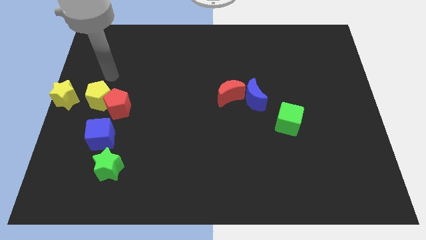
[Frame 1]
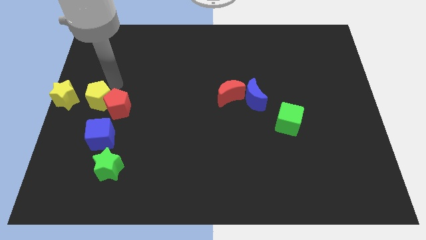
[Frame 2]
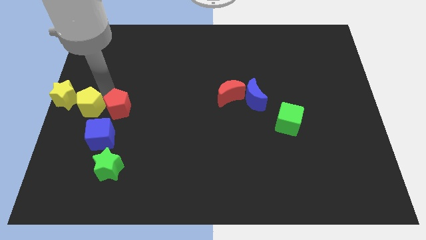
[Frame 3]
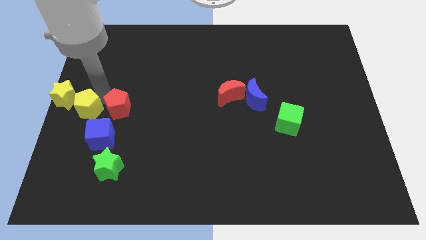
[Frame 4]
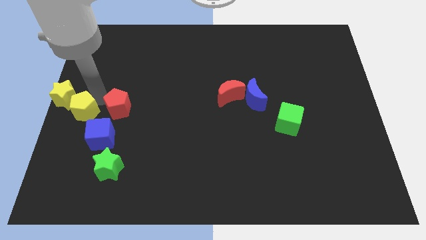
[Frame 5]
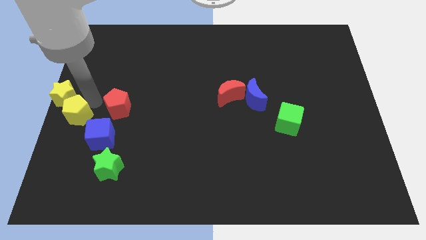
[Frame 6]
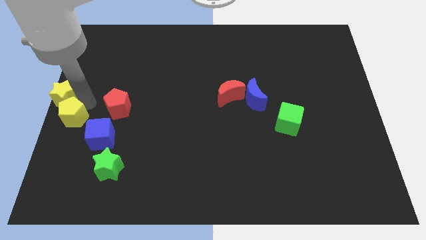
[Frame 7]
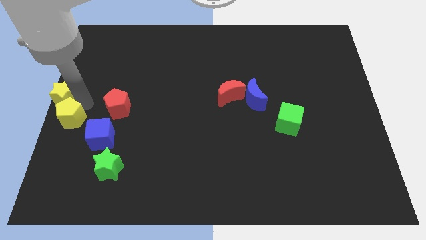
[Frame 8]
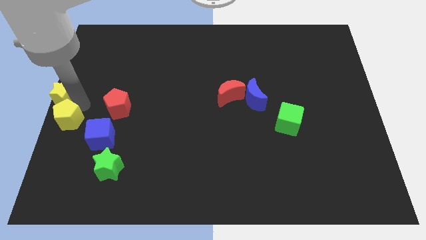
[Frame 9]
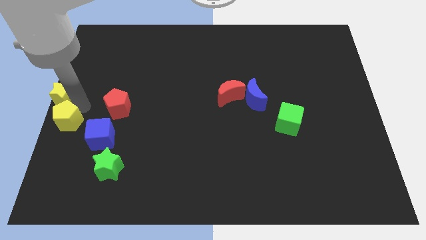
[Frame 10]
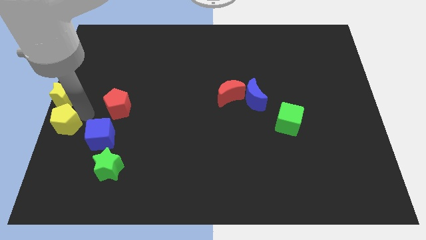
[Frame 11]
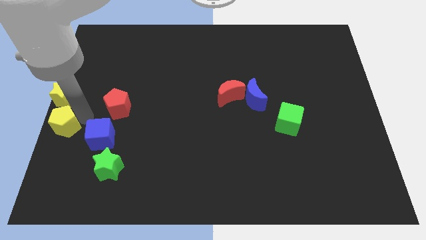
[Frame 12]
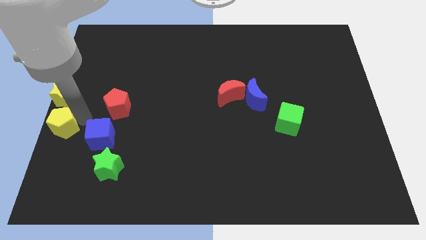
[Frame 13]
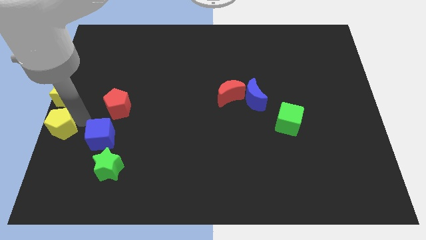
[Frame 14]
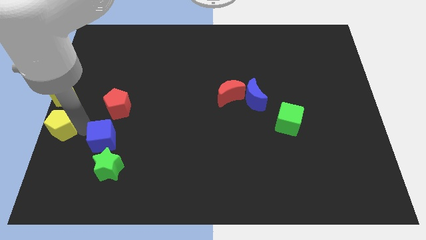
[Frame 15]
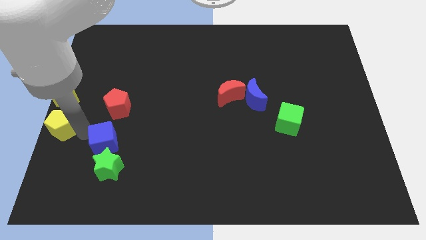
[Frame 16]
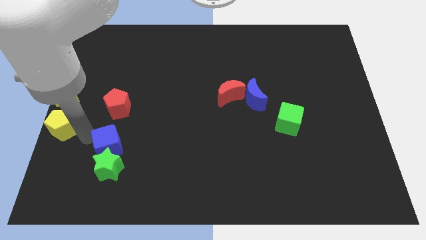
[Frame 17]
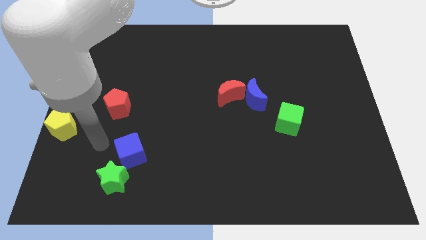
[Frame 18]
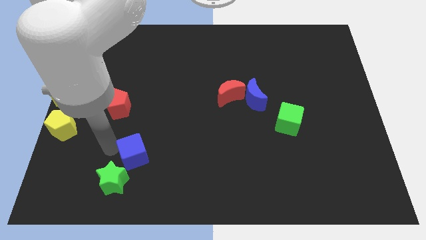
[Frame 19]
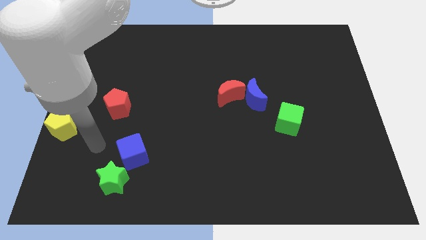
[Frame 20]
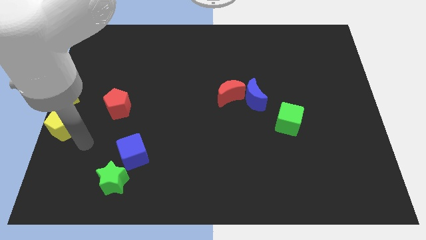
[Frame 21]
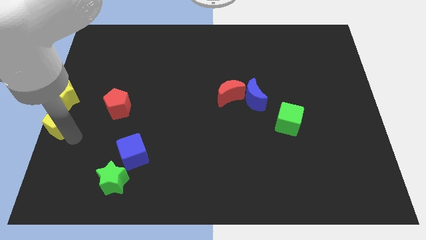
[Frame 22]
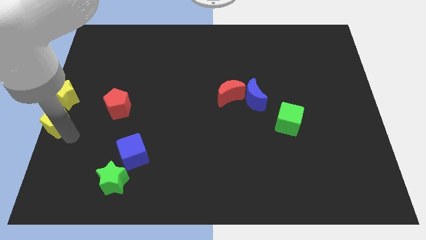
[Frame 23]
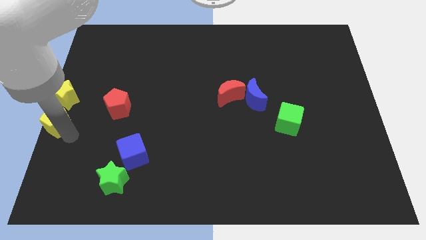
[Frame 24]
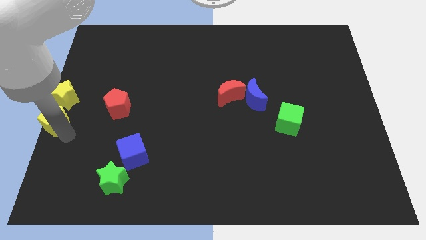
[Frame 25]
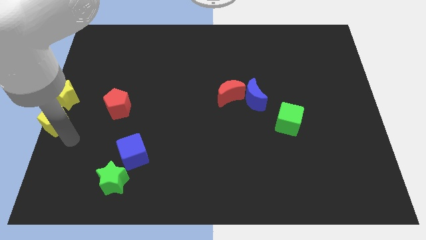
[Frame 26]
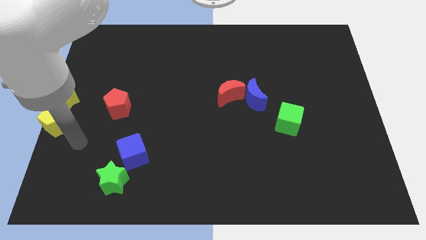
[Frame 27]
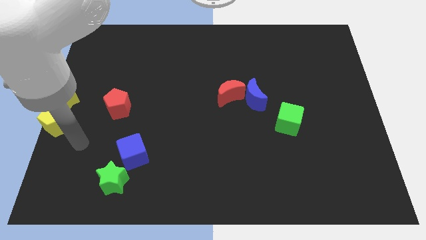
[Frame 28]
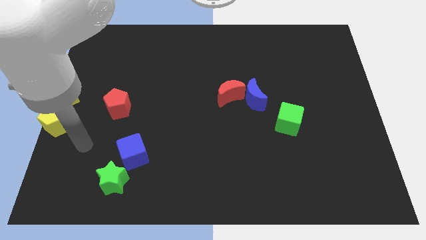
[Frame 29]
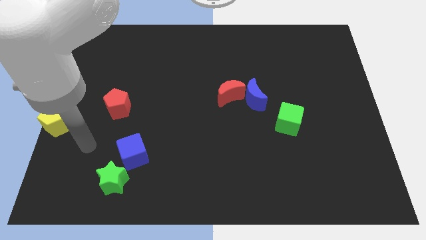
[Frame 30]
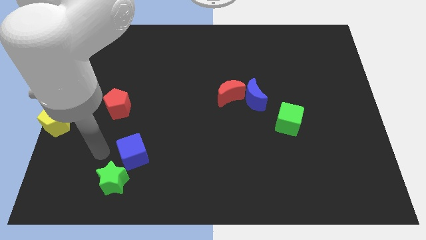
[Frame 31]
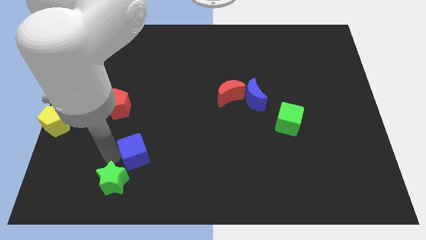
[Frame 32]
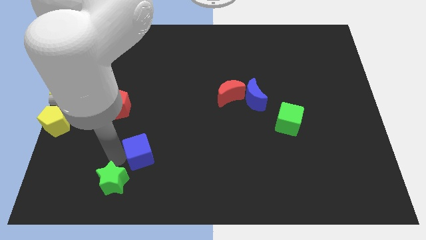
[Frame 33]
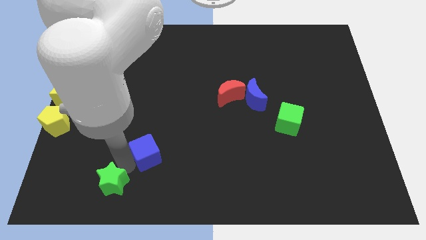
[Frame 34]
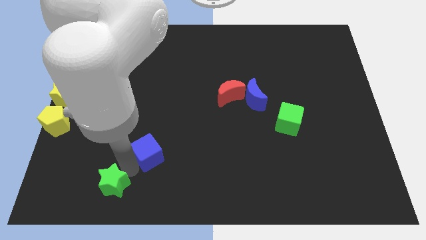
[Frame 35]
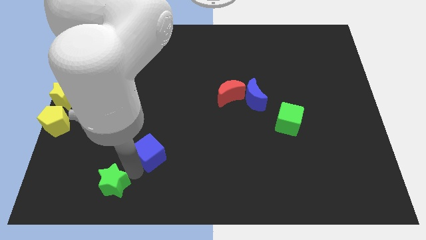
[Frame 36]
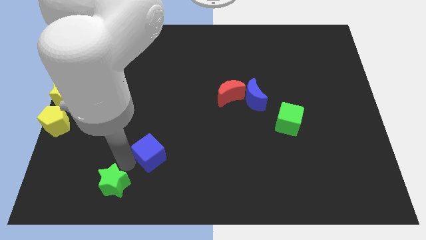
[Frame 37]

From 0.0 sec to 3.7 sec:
separate the yellow pentagon and red pentagon

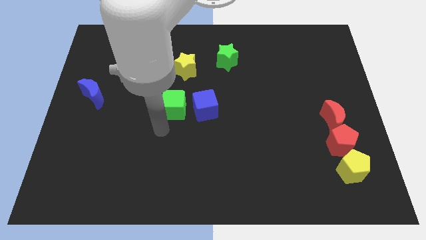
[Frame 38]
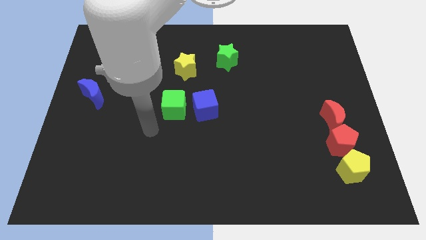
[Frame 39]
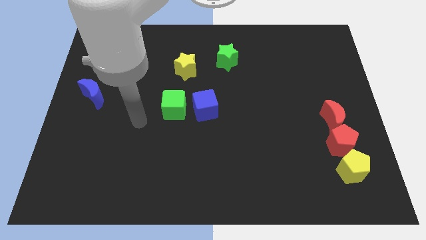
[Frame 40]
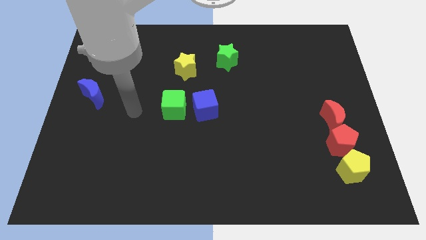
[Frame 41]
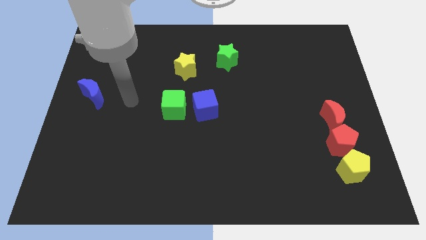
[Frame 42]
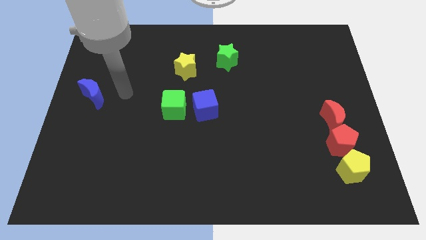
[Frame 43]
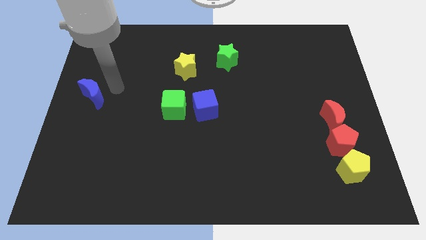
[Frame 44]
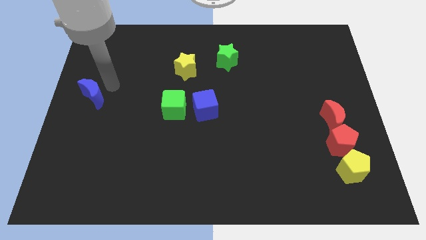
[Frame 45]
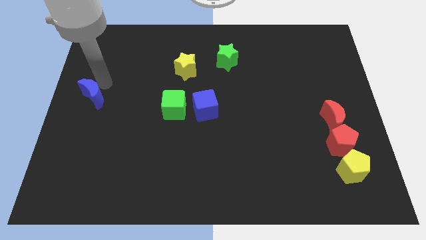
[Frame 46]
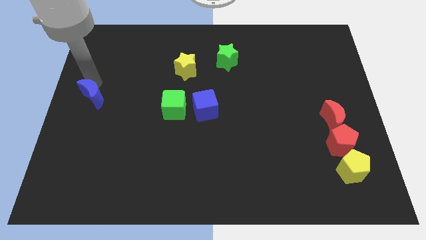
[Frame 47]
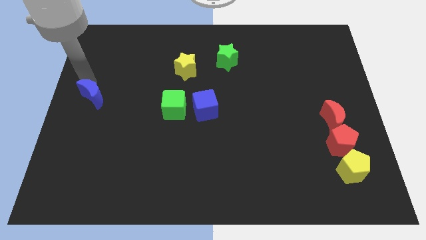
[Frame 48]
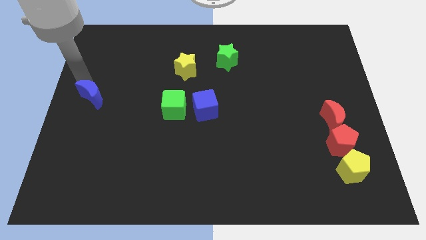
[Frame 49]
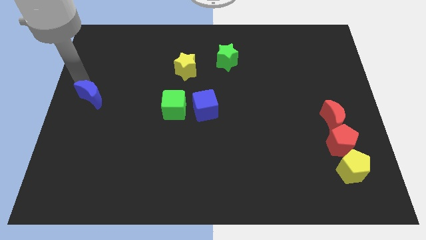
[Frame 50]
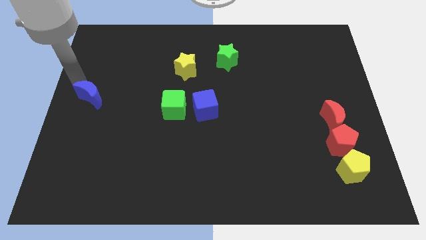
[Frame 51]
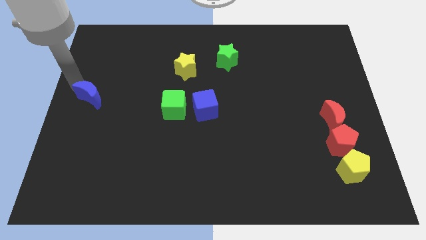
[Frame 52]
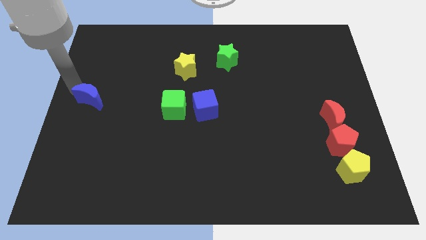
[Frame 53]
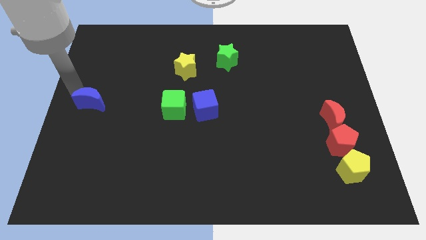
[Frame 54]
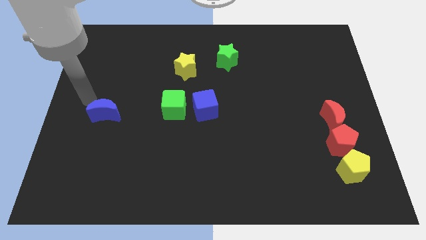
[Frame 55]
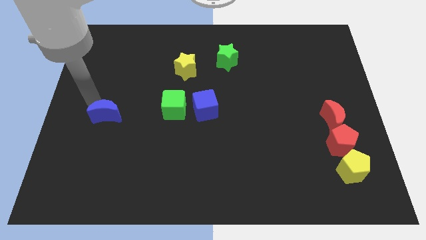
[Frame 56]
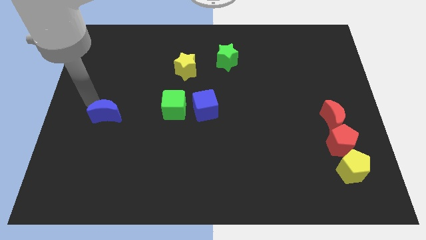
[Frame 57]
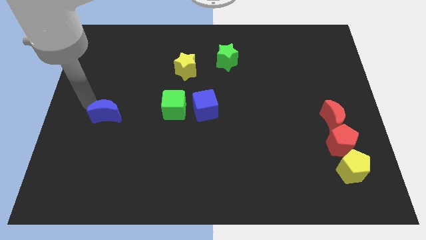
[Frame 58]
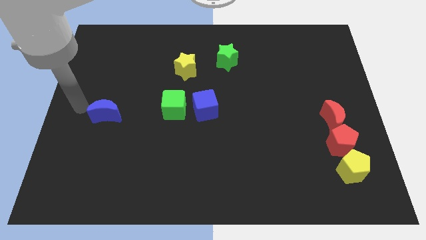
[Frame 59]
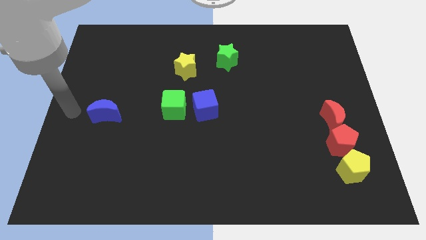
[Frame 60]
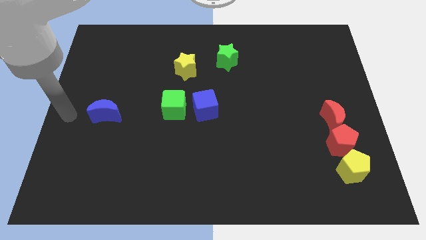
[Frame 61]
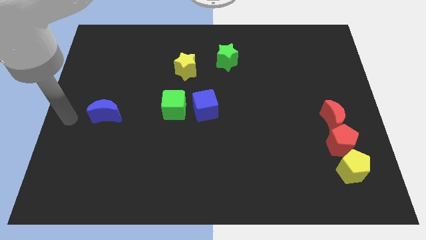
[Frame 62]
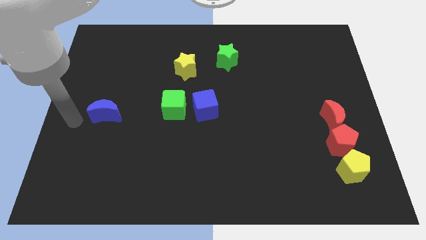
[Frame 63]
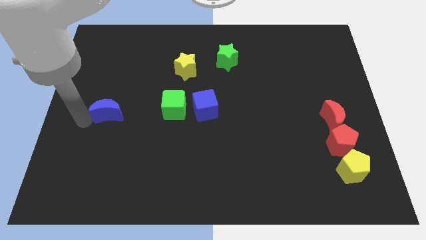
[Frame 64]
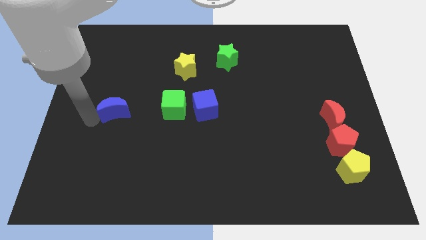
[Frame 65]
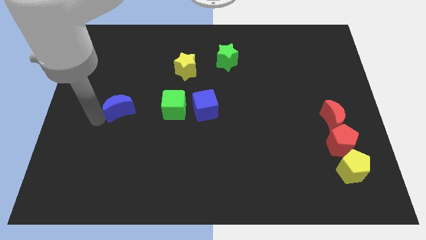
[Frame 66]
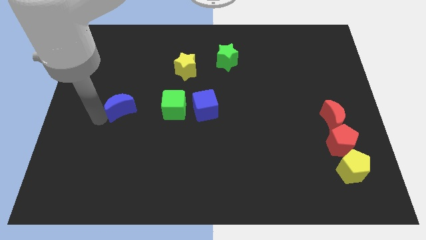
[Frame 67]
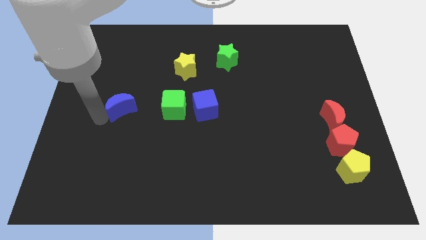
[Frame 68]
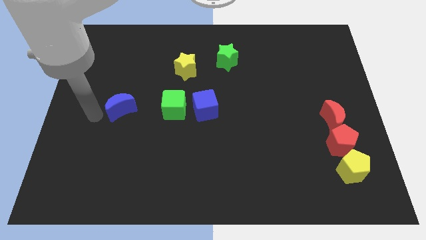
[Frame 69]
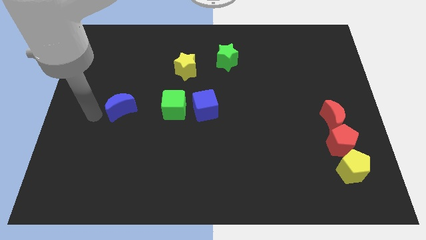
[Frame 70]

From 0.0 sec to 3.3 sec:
move the blue crescent towards green cube

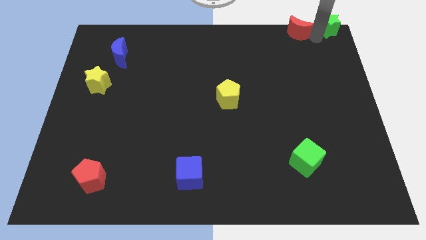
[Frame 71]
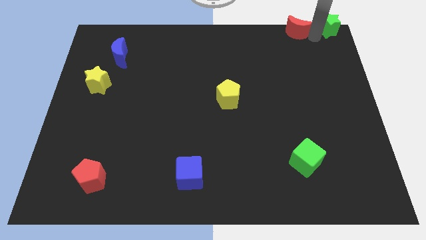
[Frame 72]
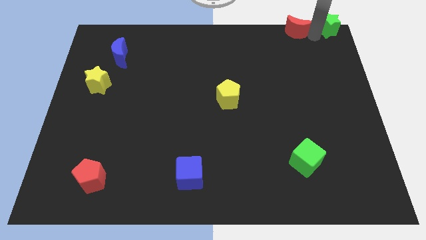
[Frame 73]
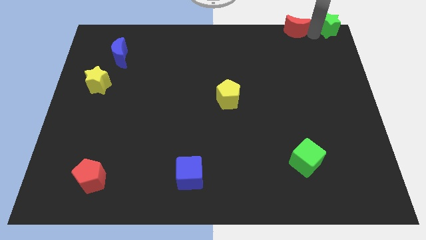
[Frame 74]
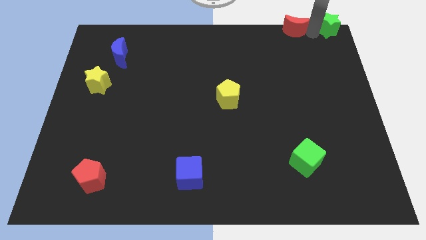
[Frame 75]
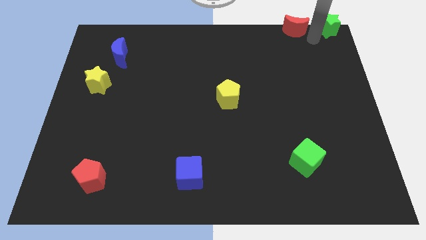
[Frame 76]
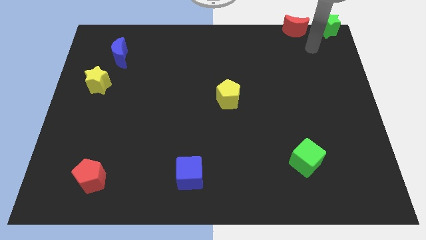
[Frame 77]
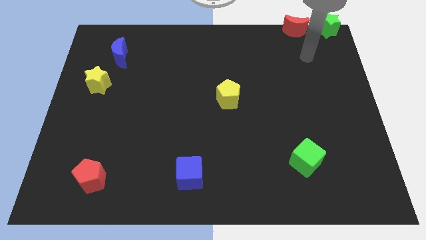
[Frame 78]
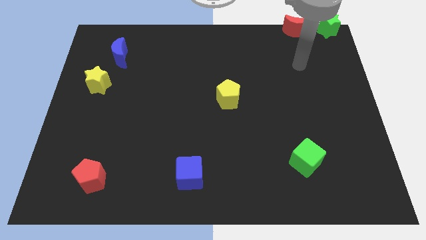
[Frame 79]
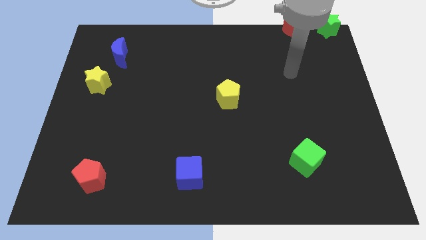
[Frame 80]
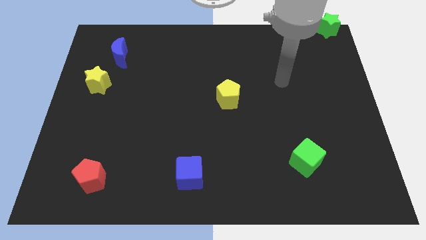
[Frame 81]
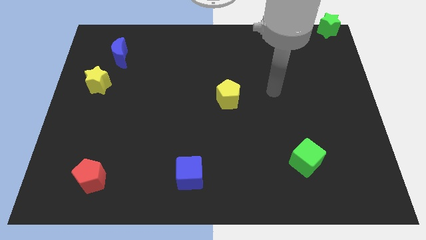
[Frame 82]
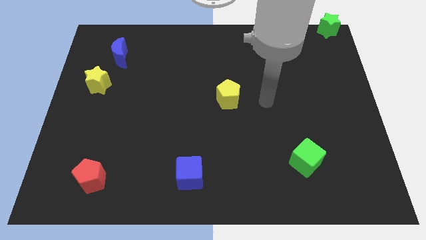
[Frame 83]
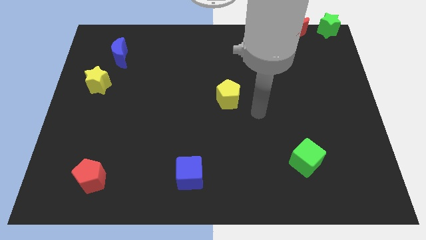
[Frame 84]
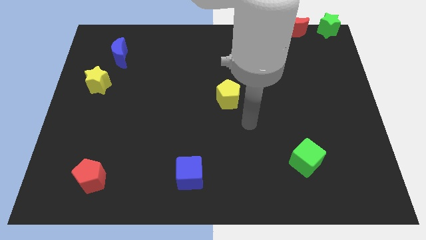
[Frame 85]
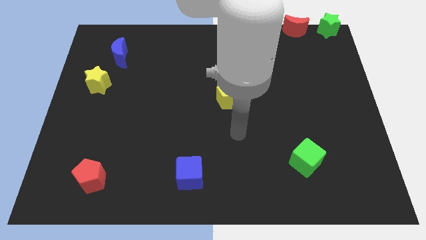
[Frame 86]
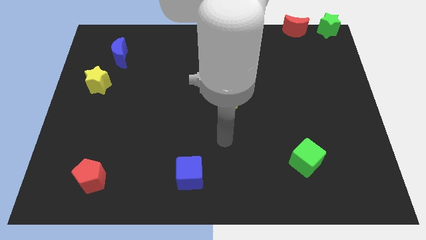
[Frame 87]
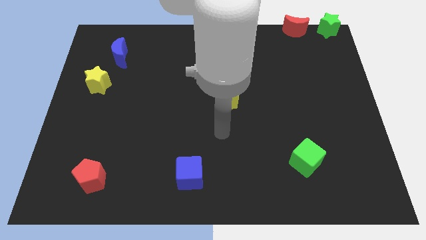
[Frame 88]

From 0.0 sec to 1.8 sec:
move the arm in between the yellow pentagon and blue cube
